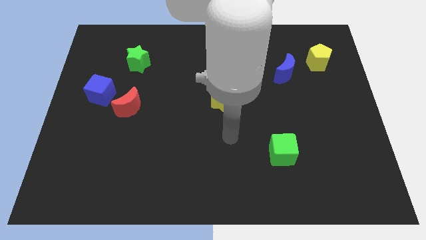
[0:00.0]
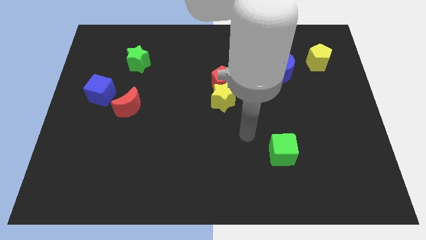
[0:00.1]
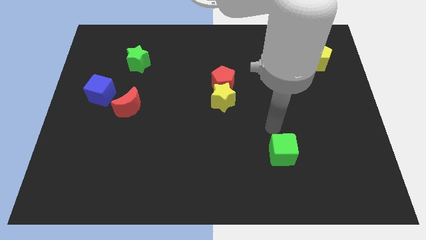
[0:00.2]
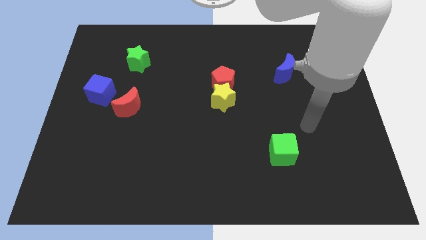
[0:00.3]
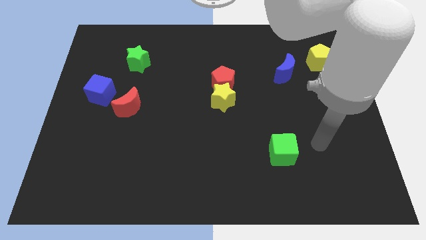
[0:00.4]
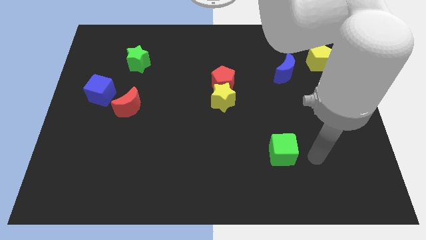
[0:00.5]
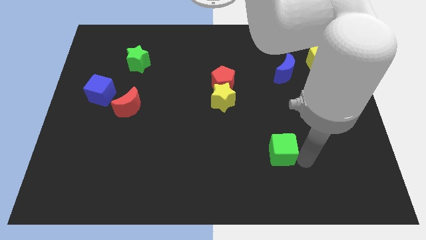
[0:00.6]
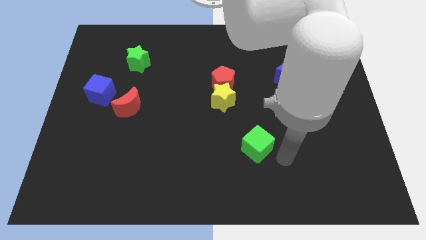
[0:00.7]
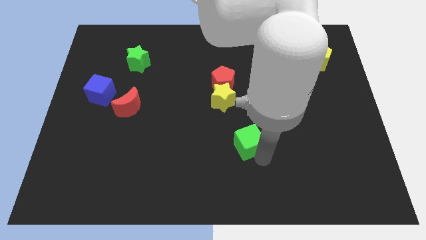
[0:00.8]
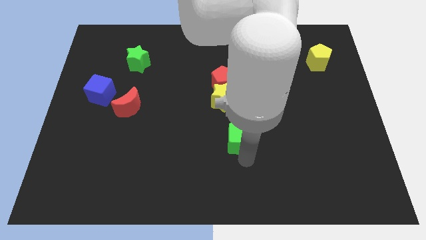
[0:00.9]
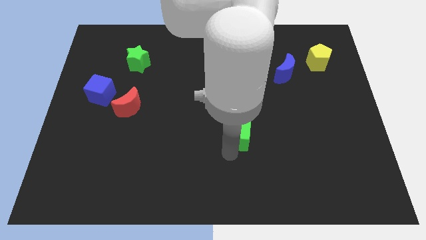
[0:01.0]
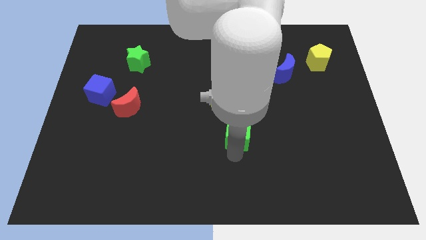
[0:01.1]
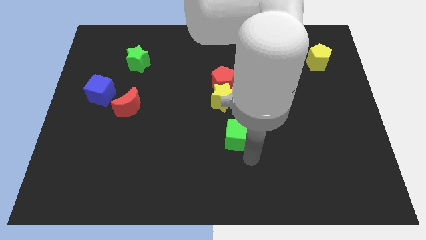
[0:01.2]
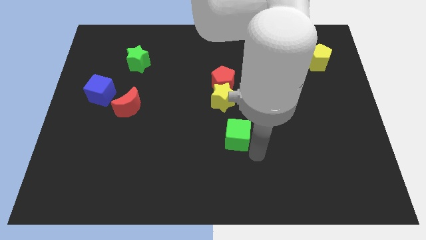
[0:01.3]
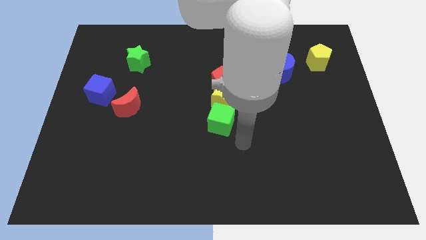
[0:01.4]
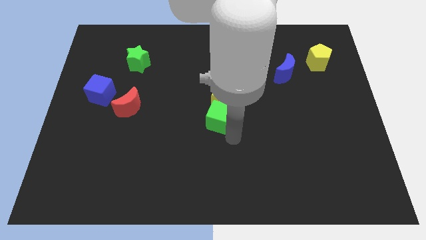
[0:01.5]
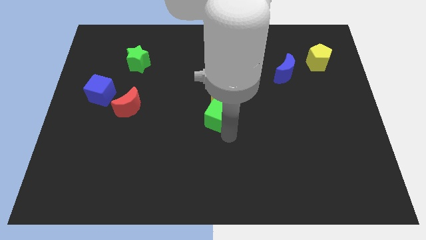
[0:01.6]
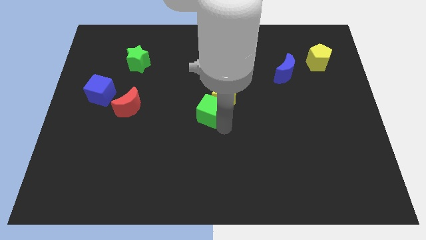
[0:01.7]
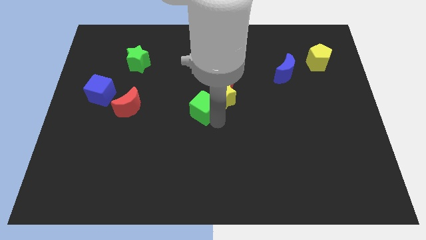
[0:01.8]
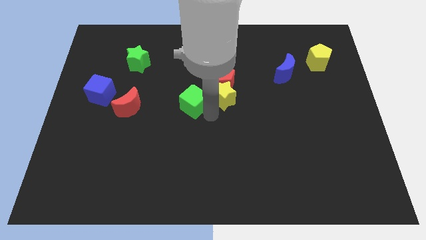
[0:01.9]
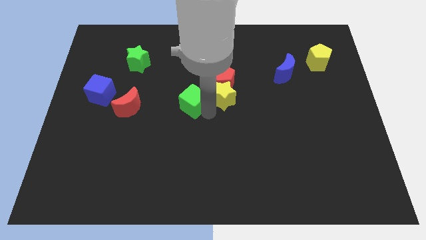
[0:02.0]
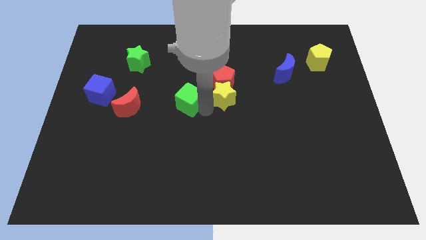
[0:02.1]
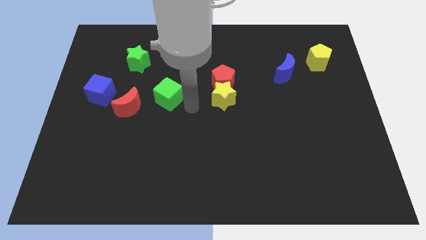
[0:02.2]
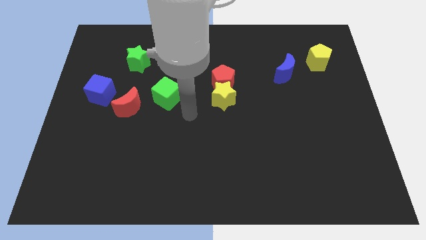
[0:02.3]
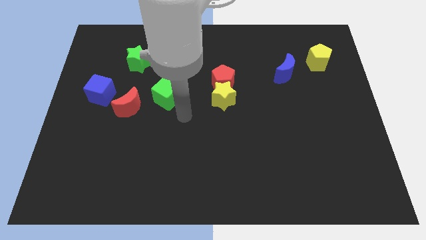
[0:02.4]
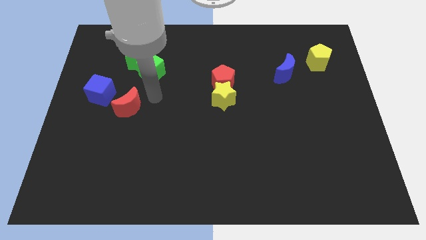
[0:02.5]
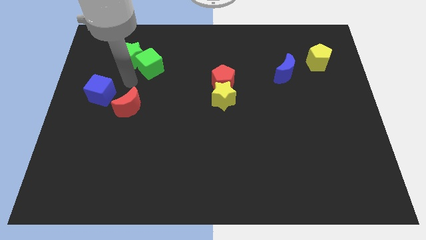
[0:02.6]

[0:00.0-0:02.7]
slide the green cube next to the green star

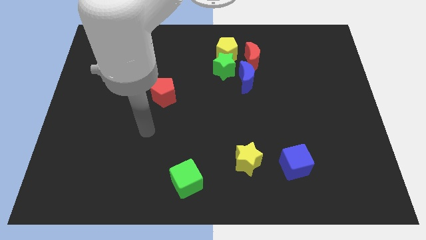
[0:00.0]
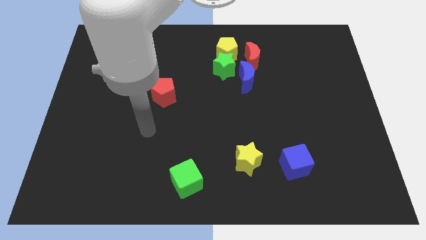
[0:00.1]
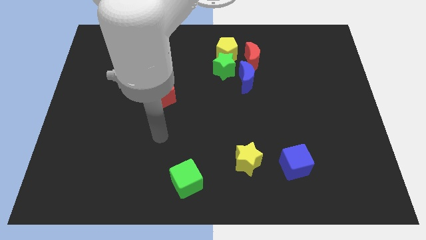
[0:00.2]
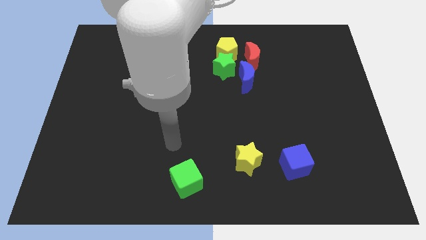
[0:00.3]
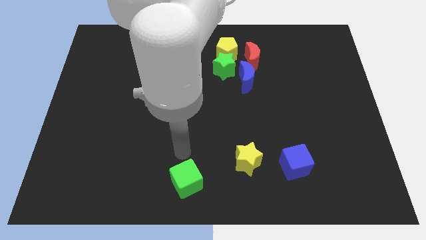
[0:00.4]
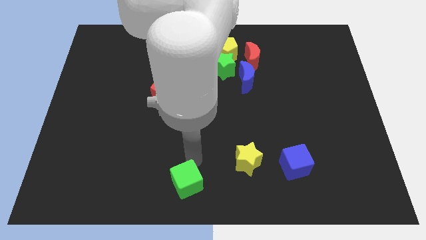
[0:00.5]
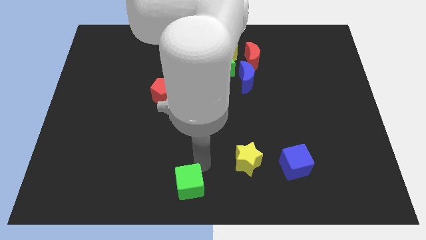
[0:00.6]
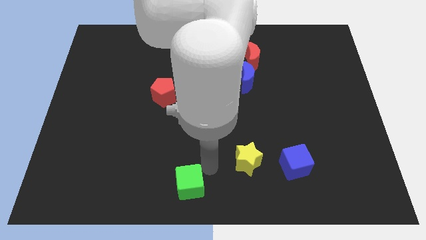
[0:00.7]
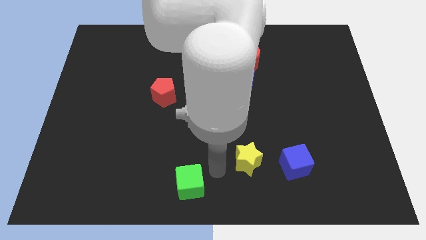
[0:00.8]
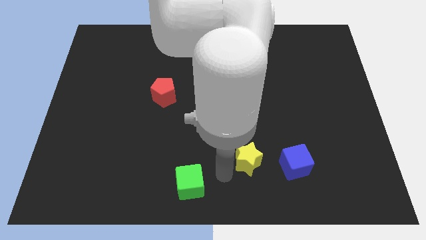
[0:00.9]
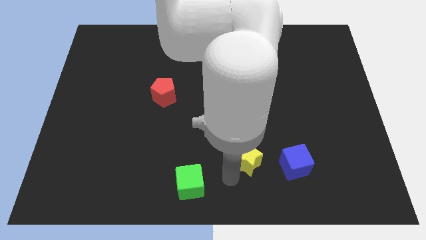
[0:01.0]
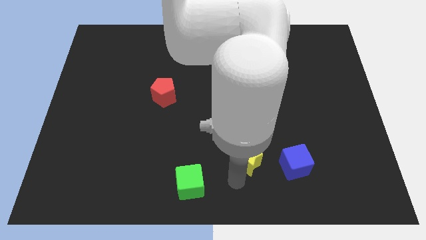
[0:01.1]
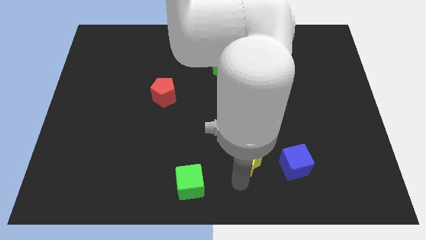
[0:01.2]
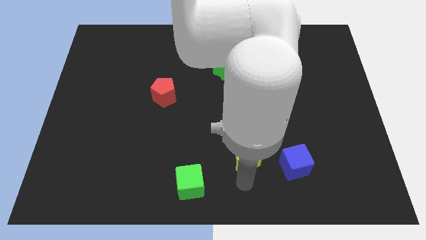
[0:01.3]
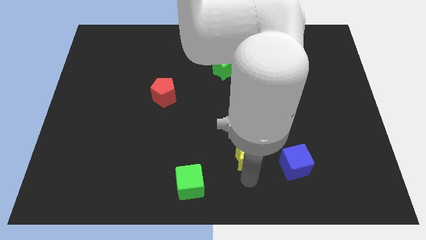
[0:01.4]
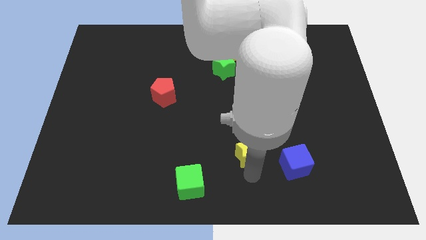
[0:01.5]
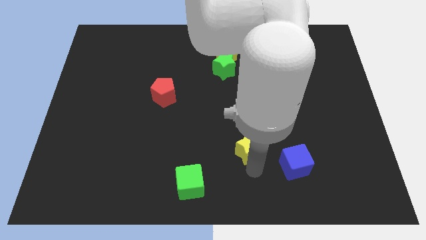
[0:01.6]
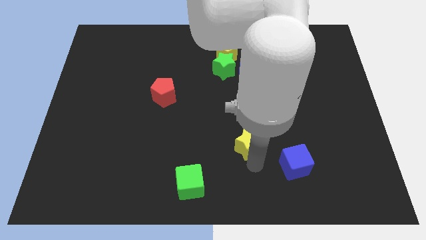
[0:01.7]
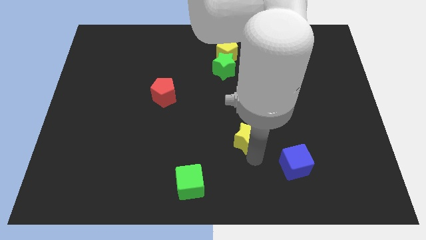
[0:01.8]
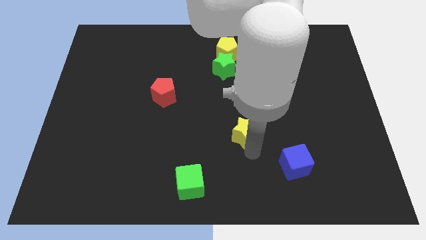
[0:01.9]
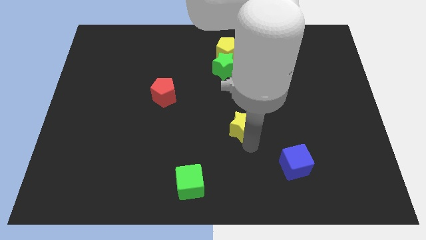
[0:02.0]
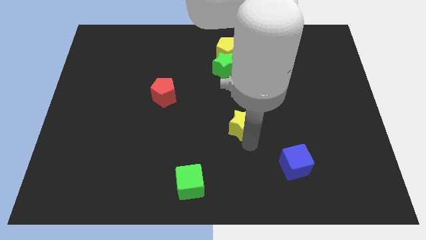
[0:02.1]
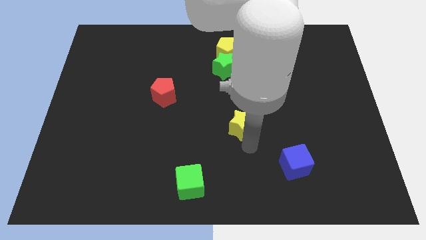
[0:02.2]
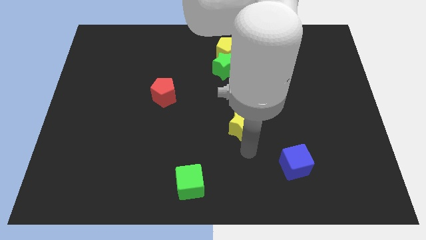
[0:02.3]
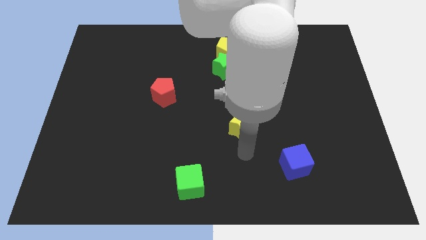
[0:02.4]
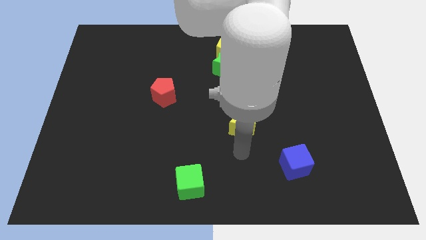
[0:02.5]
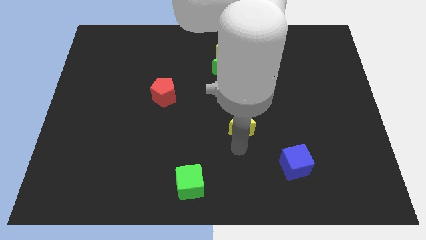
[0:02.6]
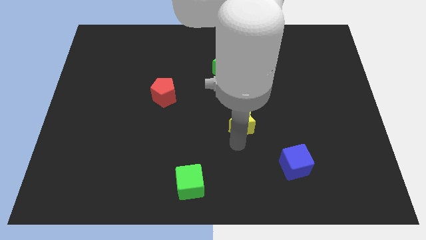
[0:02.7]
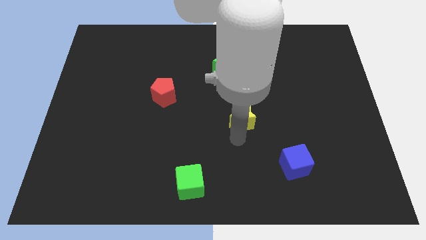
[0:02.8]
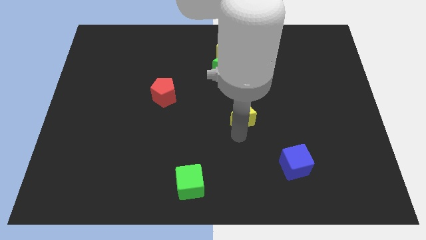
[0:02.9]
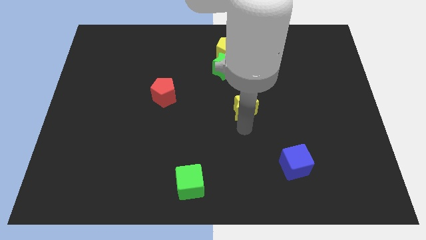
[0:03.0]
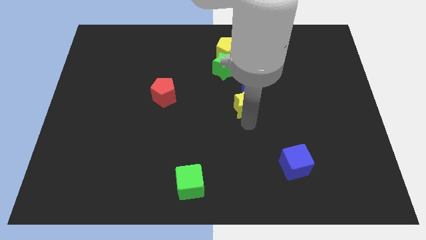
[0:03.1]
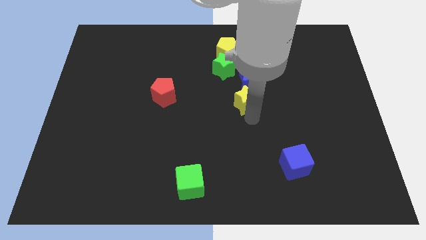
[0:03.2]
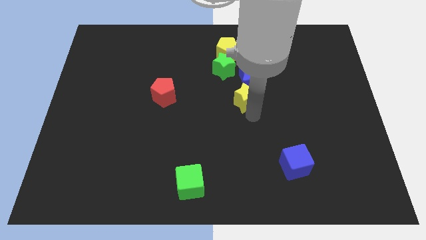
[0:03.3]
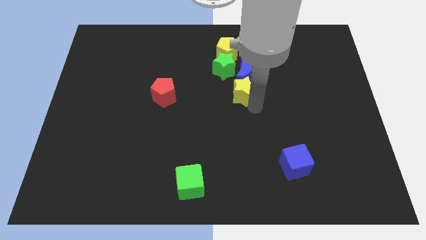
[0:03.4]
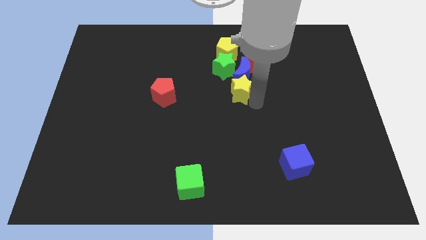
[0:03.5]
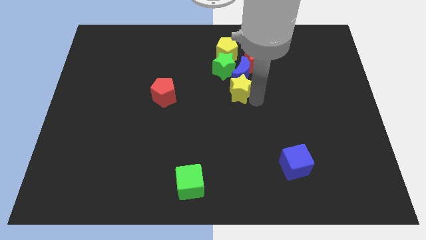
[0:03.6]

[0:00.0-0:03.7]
push the yellow star towards the blue moon

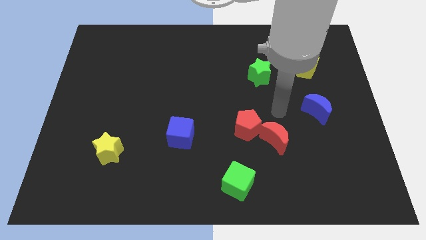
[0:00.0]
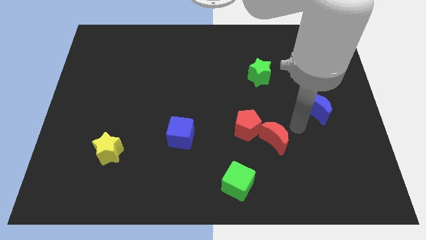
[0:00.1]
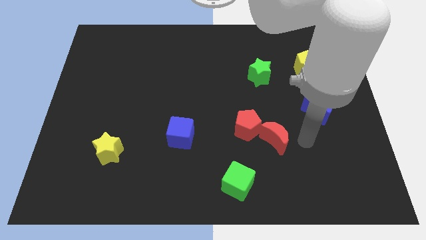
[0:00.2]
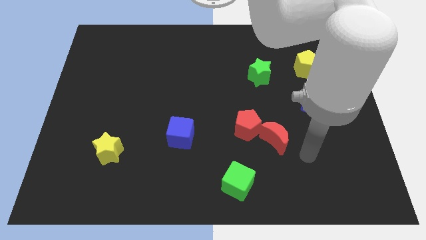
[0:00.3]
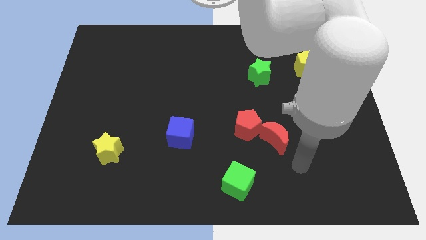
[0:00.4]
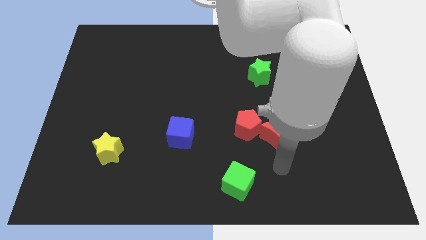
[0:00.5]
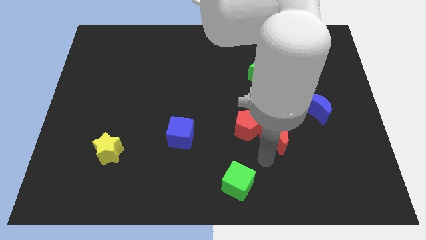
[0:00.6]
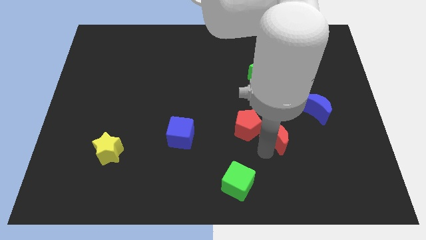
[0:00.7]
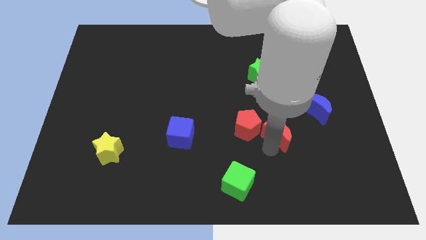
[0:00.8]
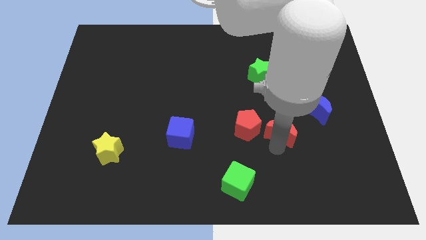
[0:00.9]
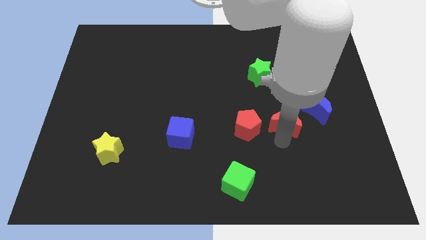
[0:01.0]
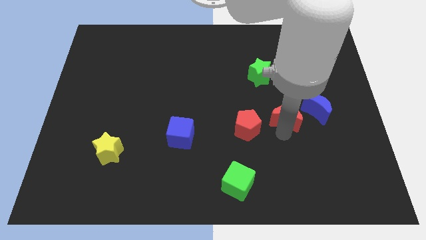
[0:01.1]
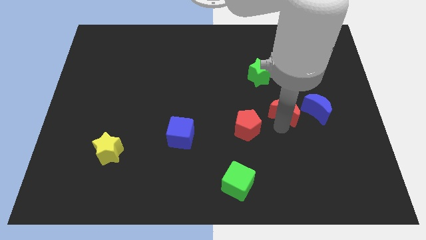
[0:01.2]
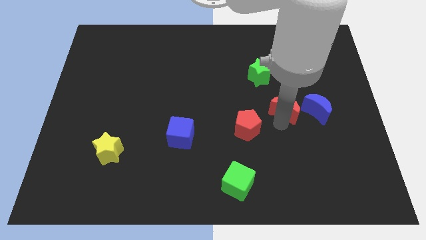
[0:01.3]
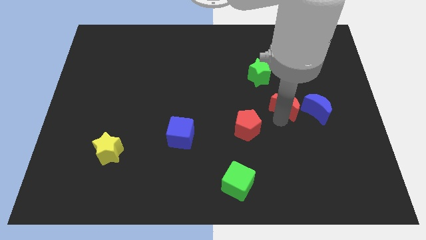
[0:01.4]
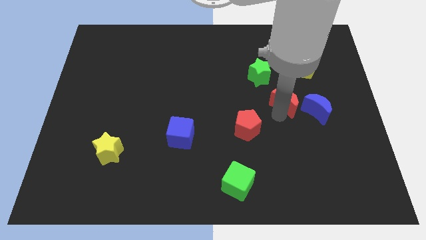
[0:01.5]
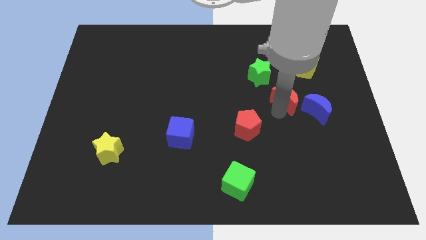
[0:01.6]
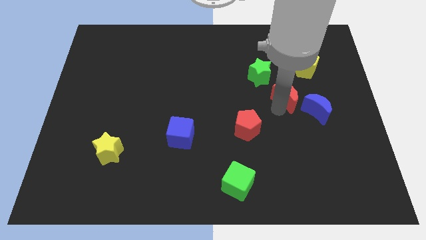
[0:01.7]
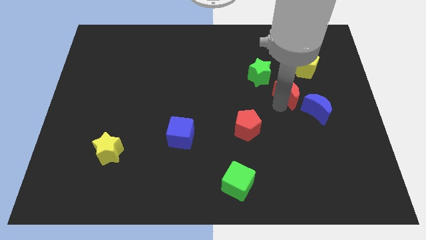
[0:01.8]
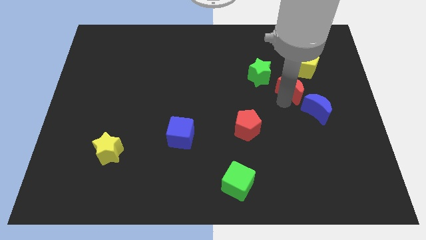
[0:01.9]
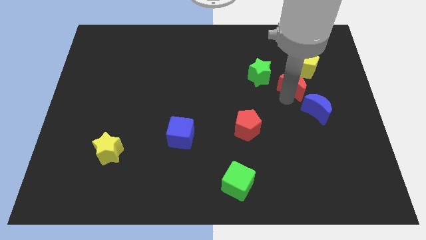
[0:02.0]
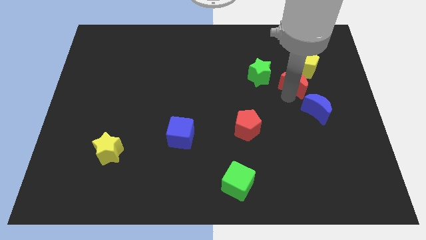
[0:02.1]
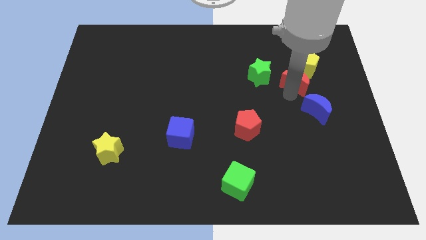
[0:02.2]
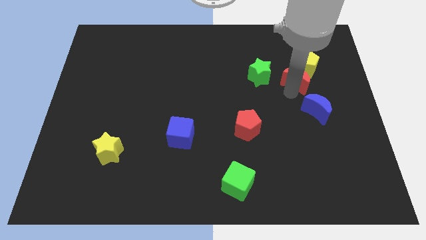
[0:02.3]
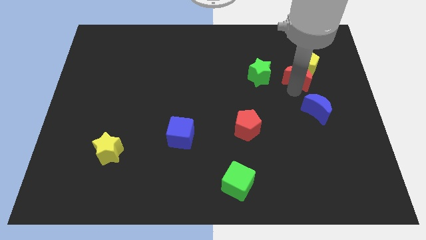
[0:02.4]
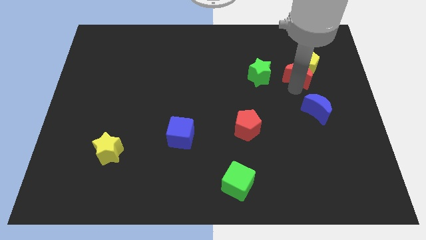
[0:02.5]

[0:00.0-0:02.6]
slide the red moon next to the yellow pentagon
